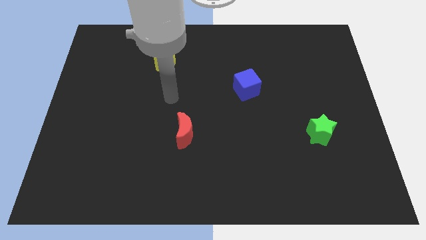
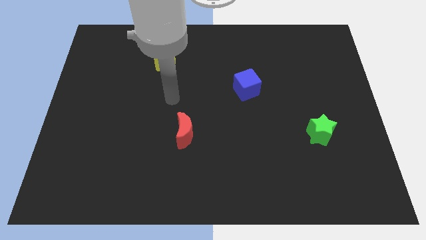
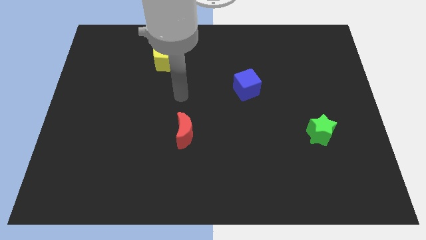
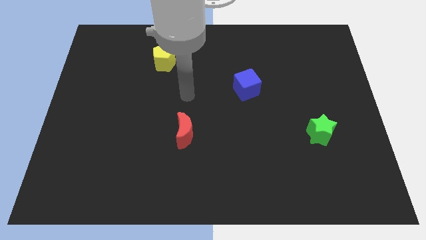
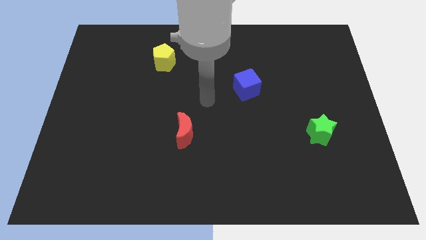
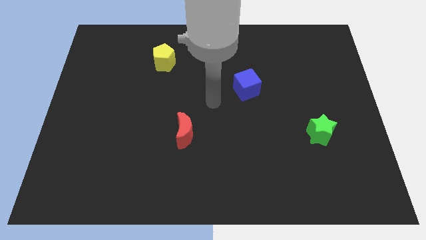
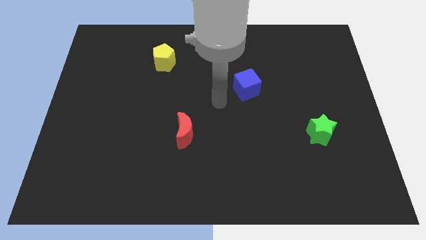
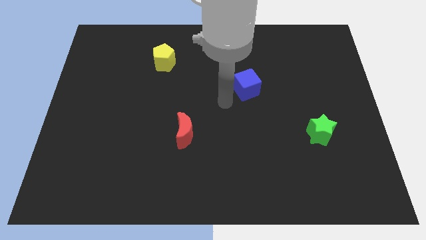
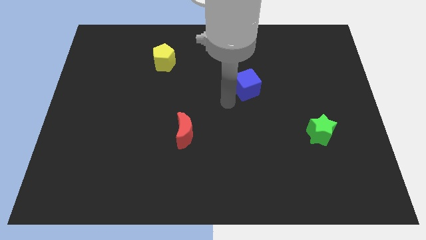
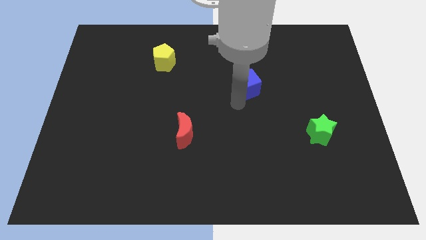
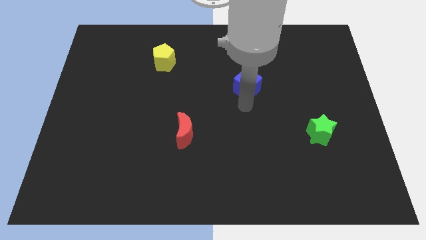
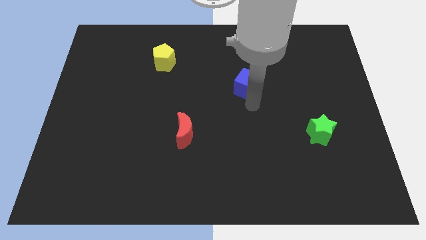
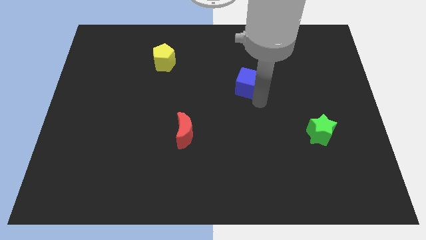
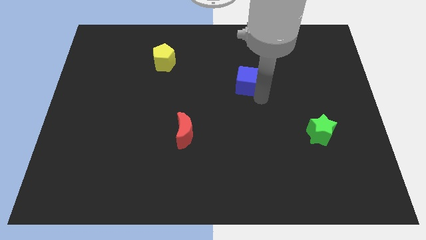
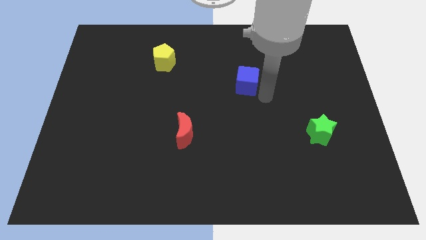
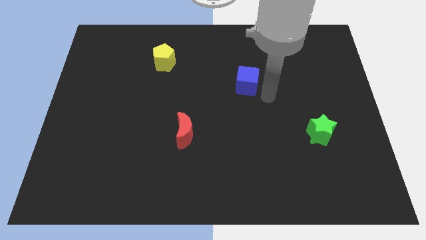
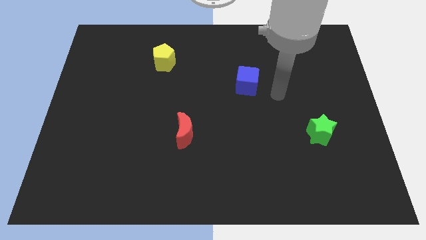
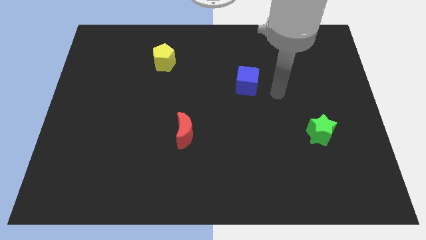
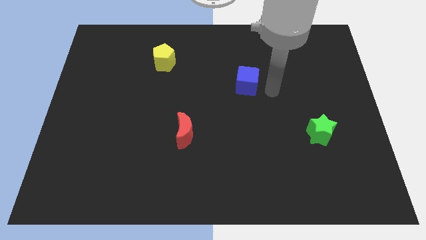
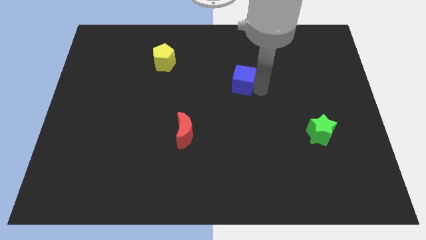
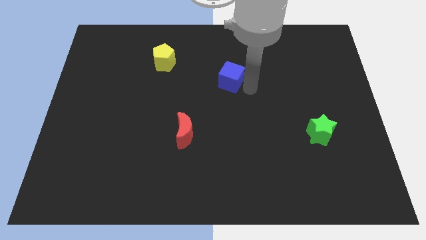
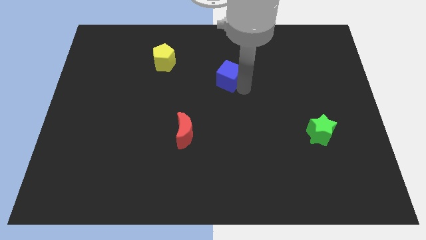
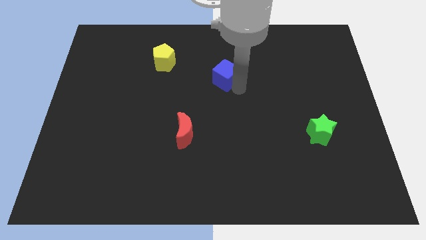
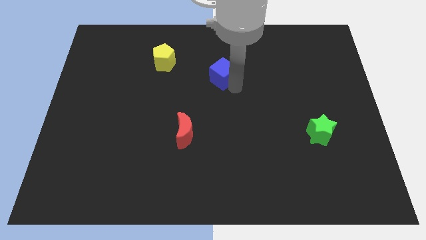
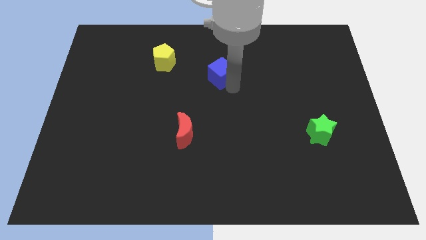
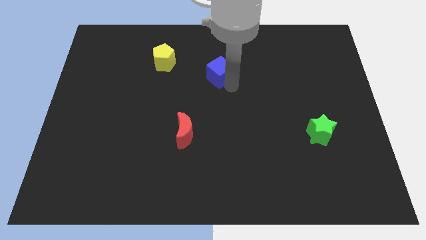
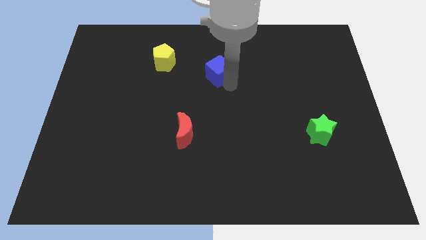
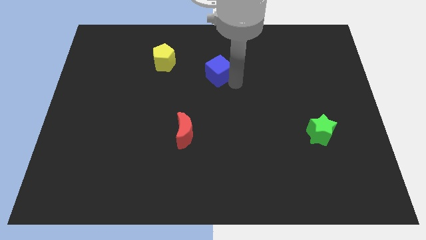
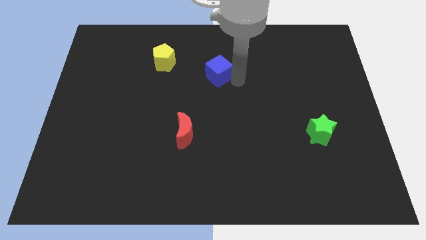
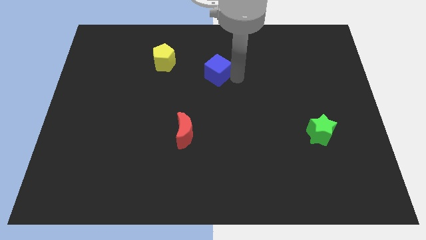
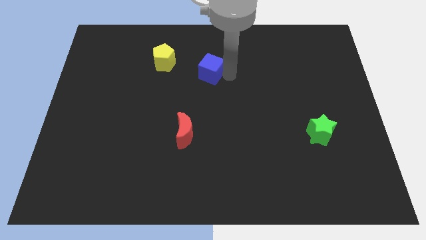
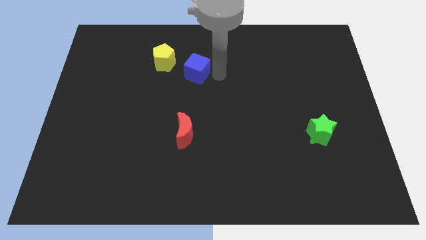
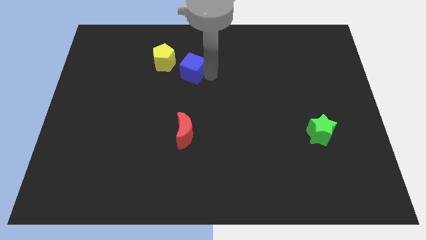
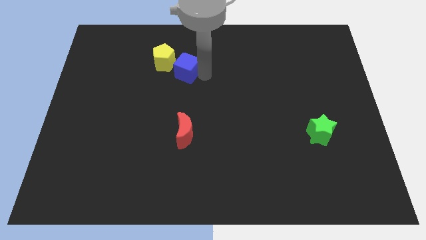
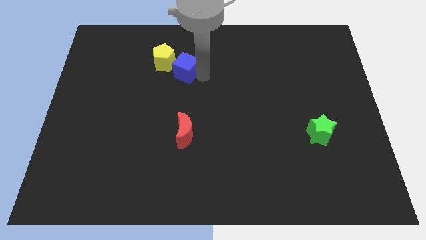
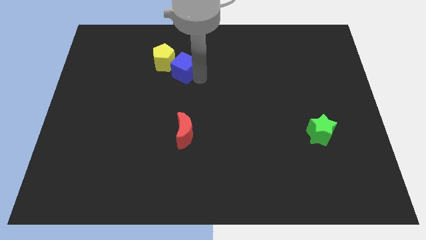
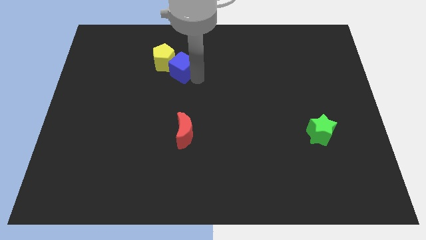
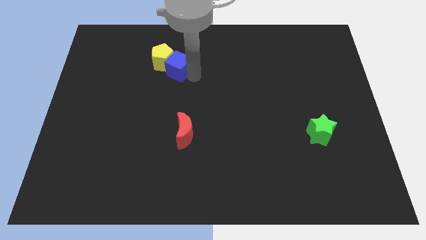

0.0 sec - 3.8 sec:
put the cube close to the yellow pentagon

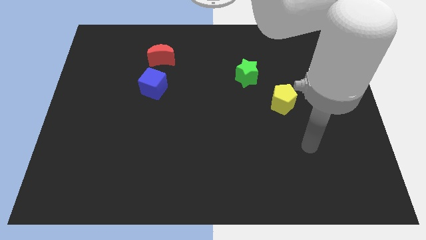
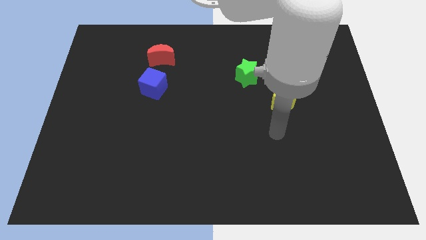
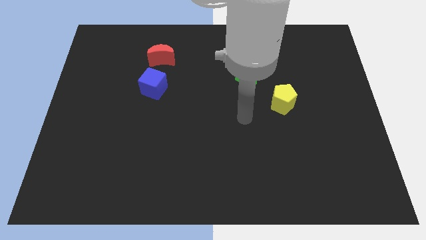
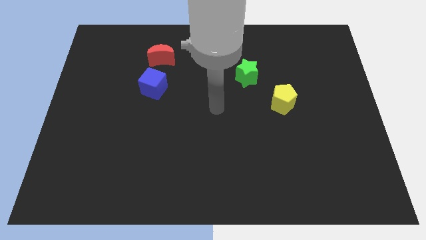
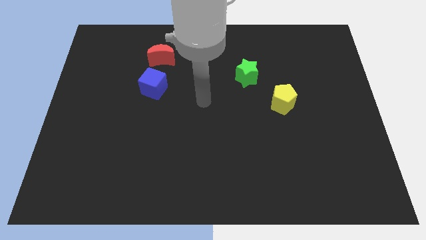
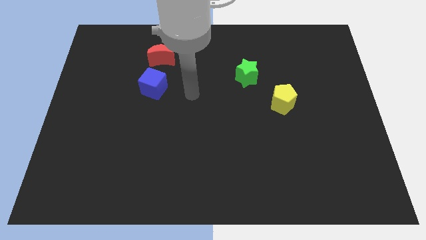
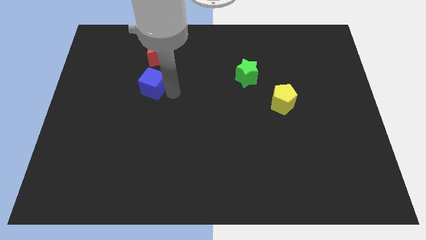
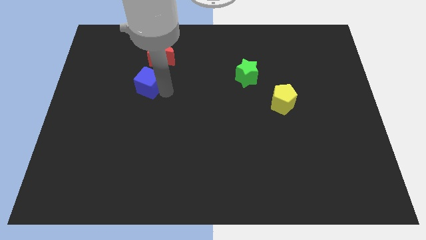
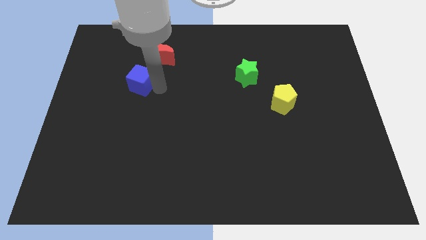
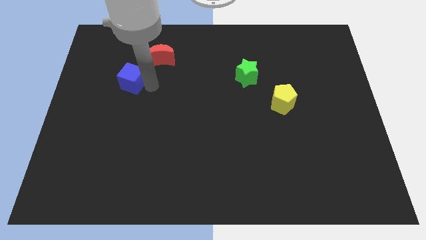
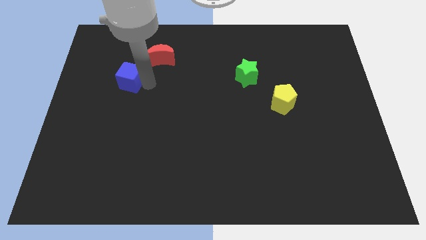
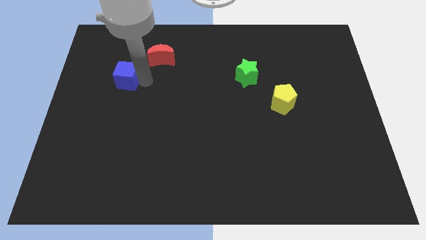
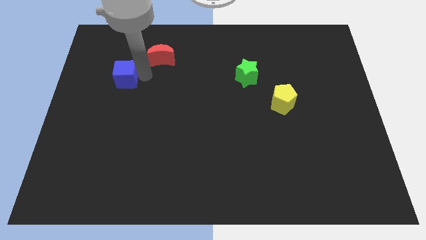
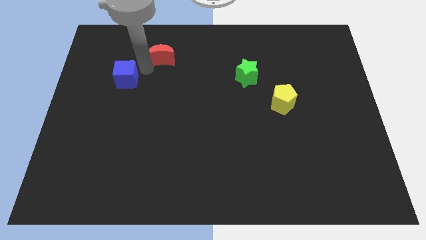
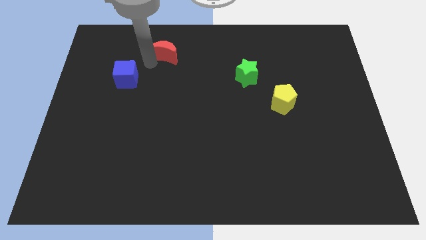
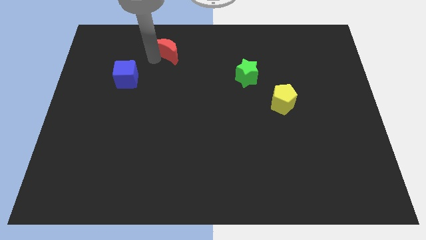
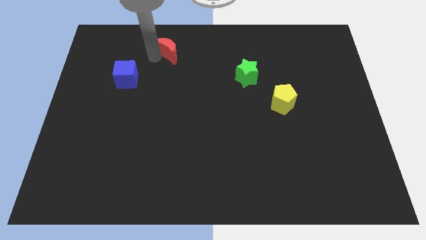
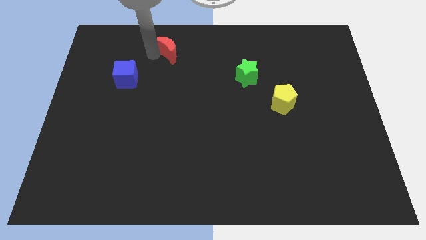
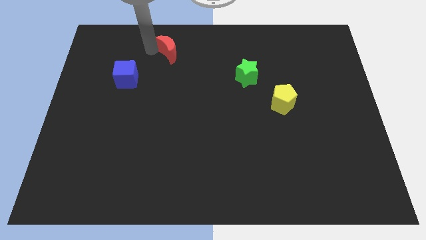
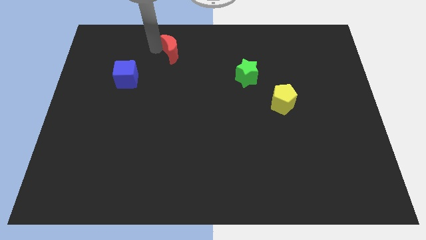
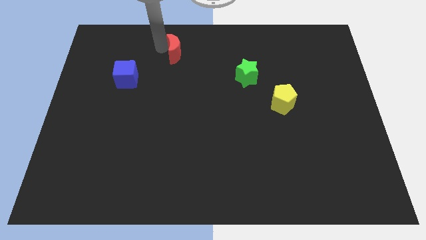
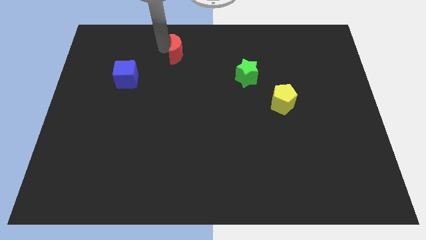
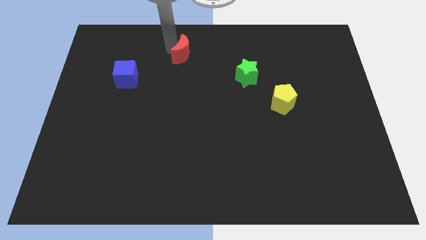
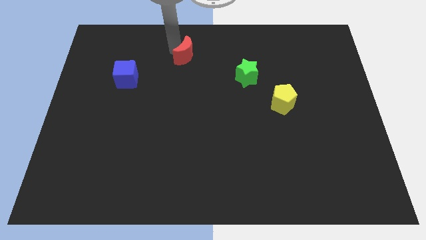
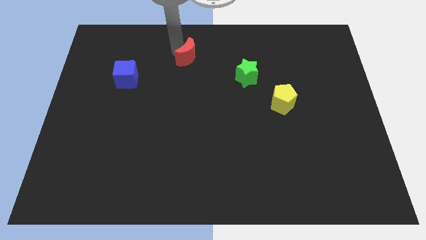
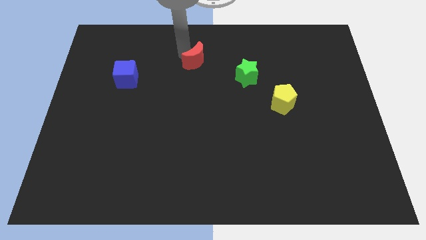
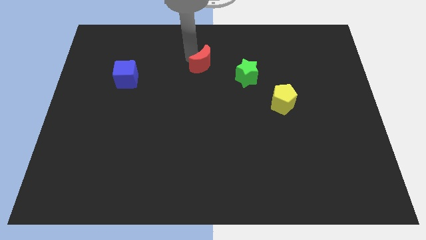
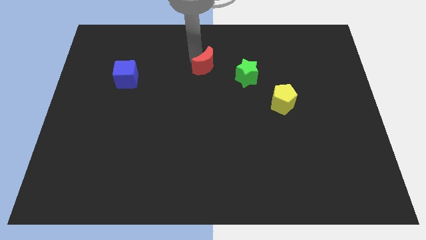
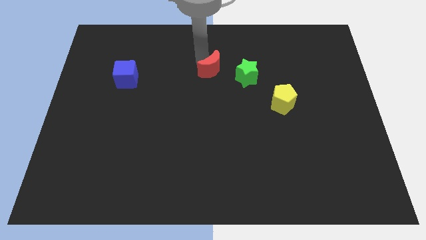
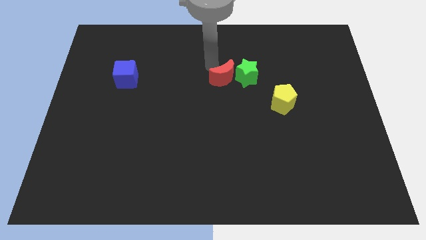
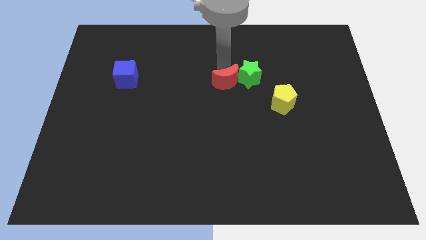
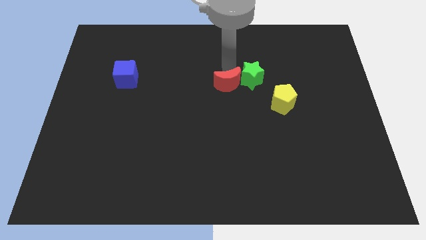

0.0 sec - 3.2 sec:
slide the moon next to the star

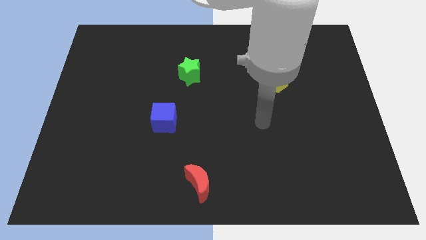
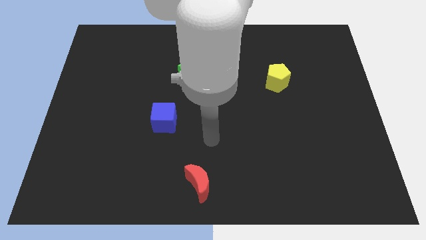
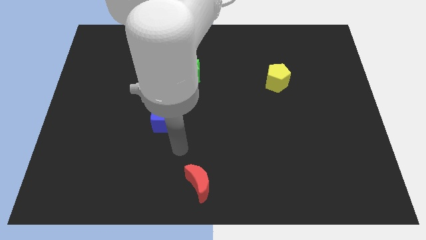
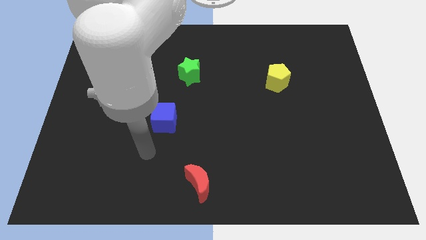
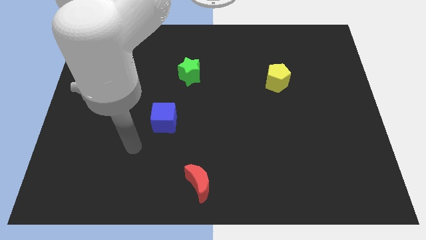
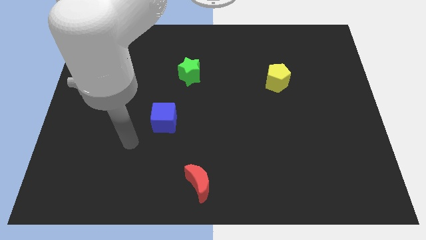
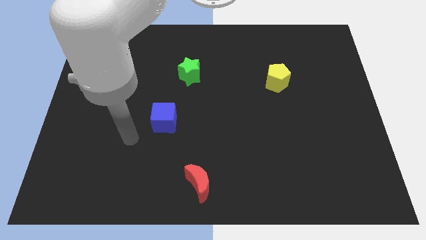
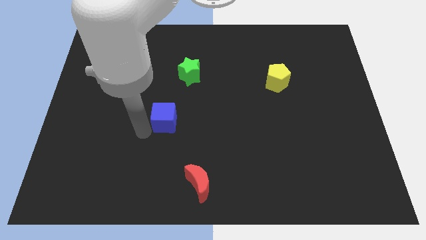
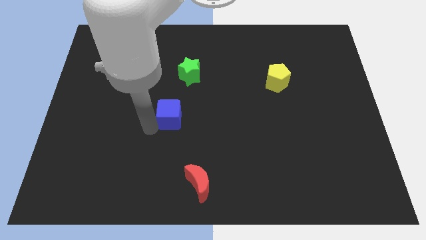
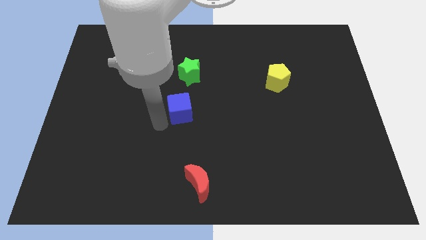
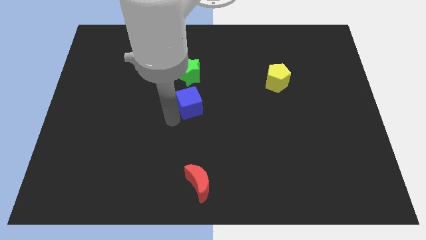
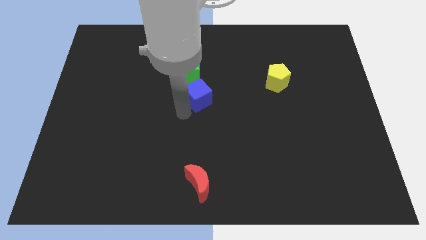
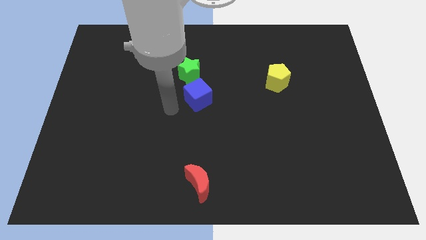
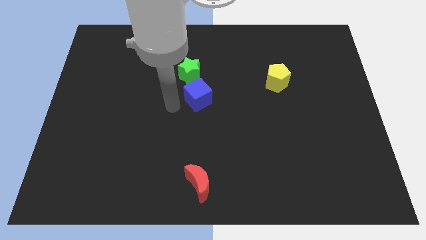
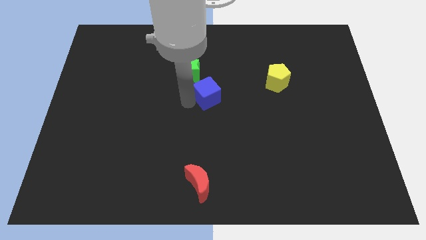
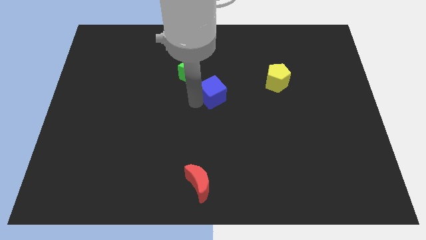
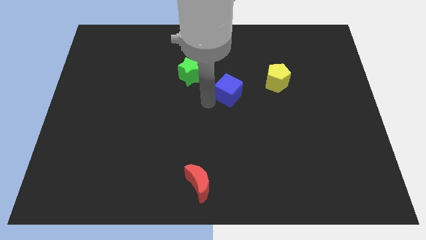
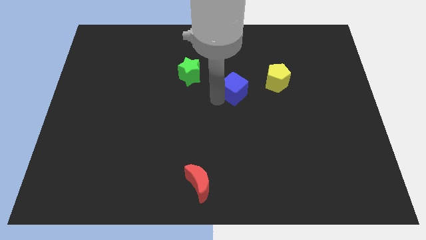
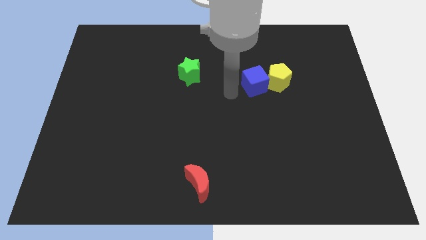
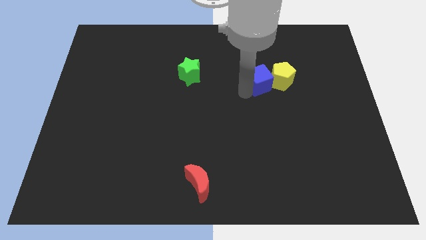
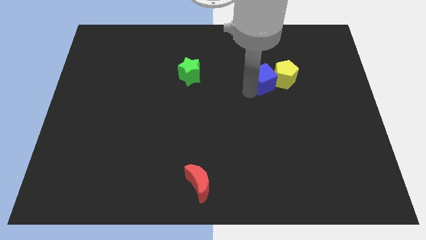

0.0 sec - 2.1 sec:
slide the blue cube close to the yellow block
